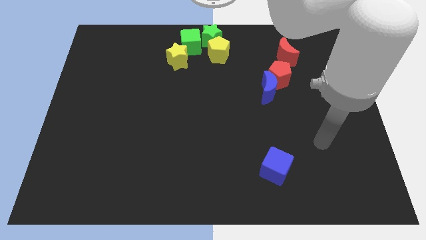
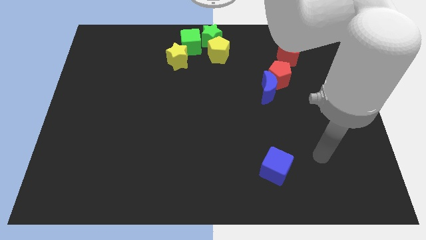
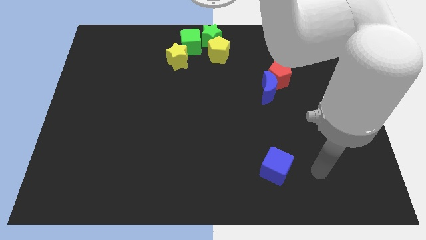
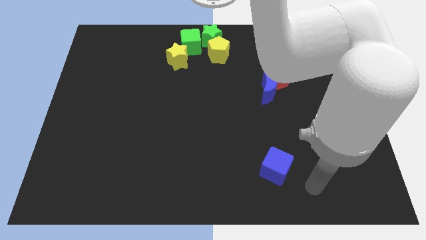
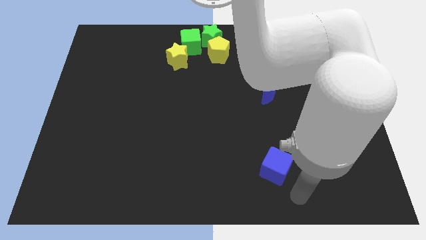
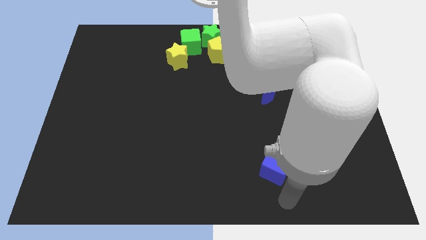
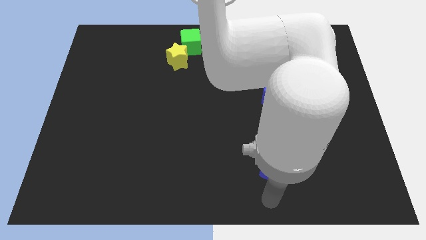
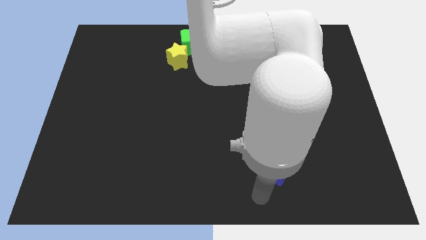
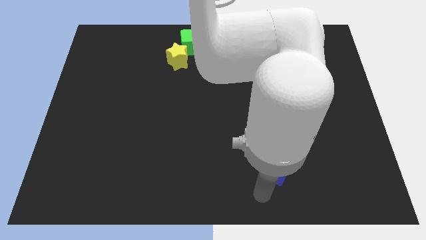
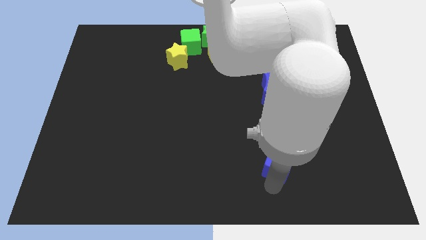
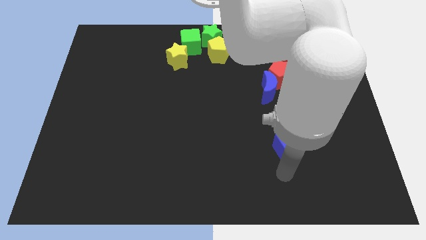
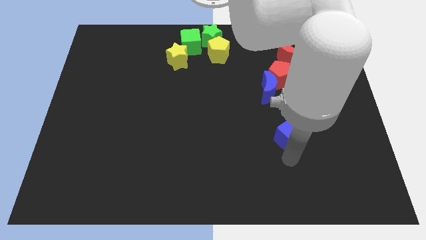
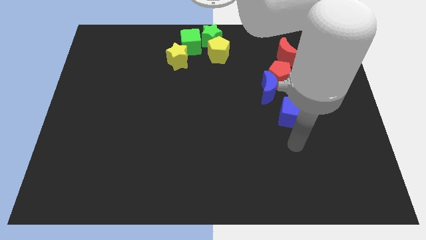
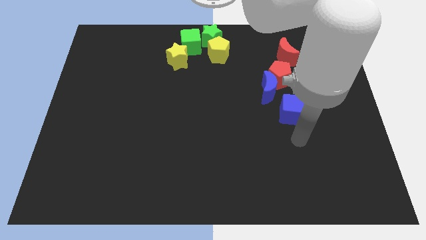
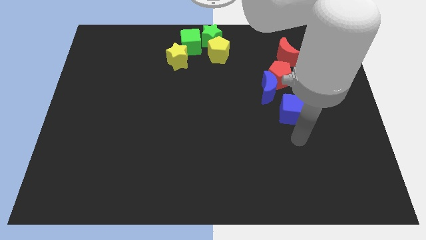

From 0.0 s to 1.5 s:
move the blue cube diagonally bottom right to the blue moon

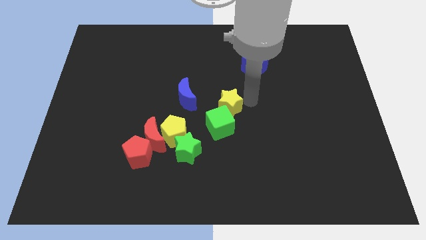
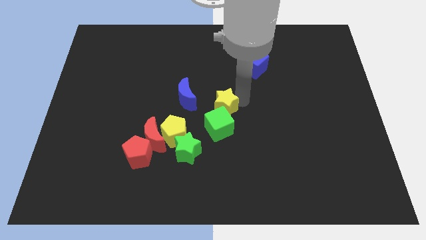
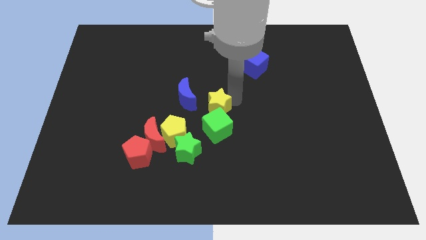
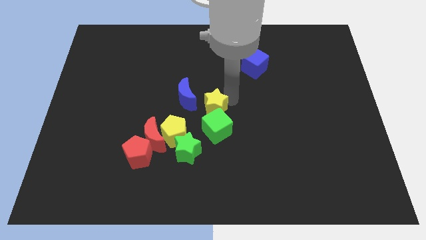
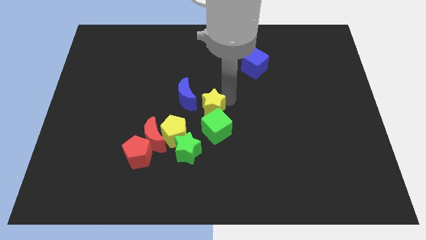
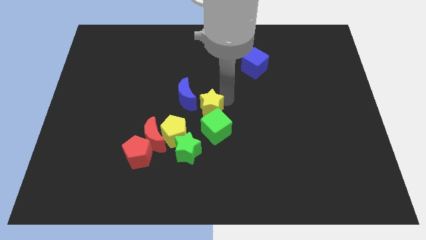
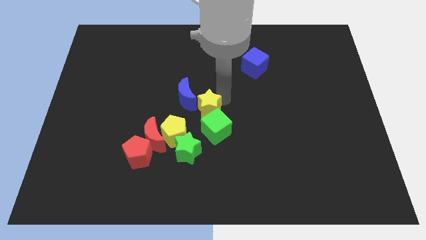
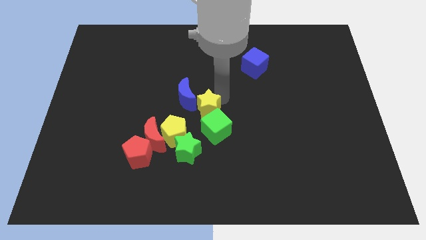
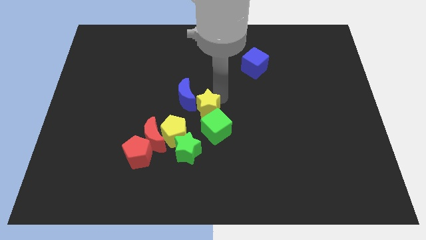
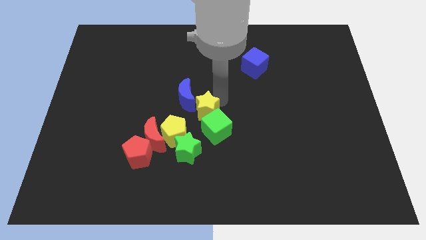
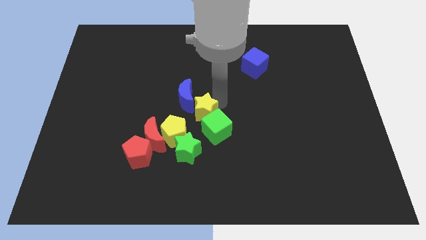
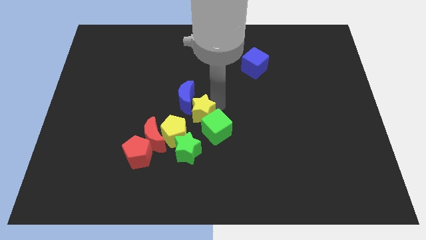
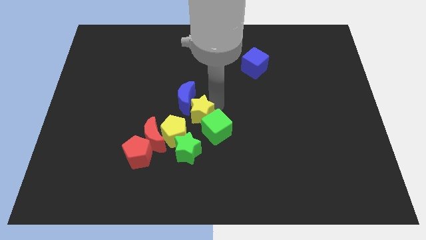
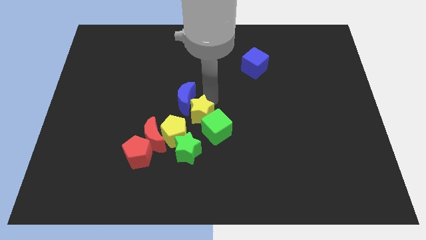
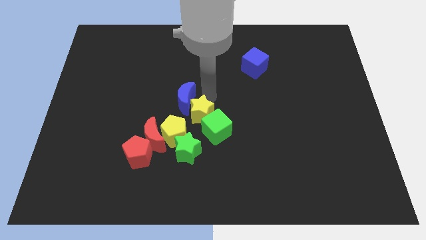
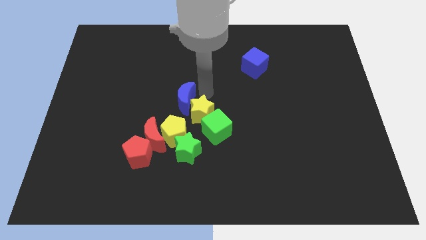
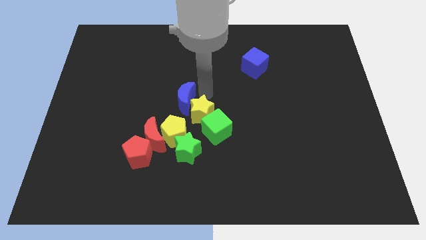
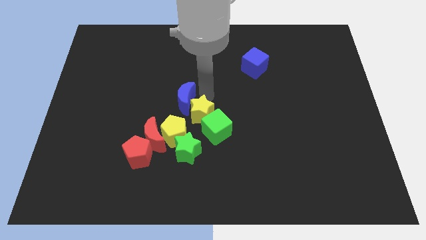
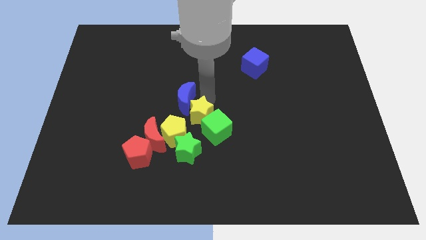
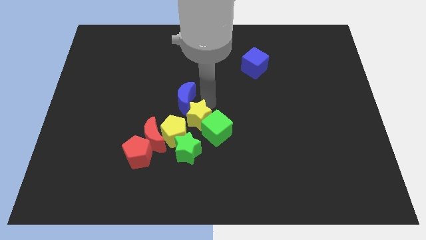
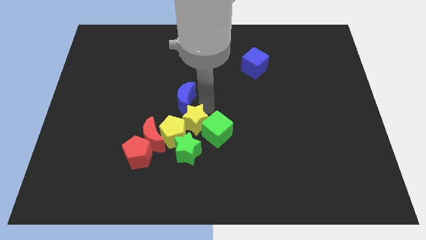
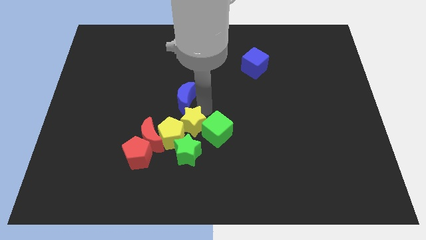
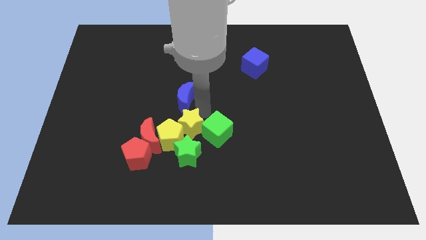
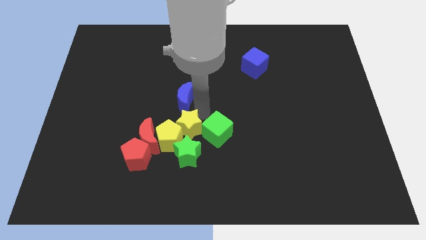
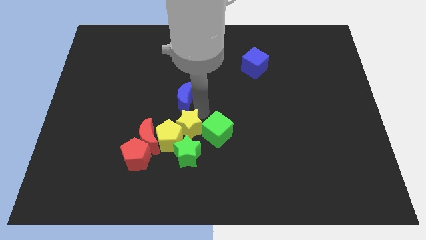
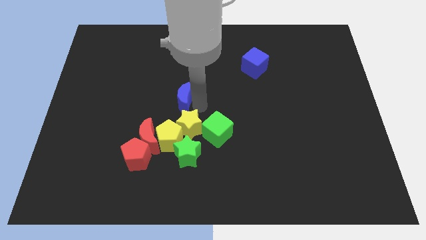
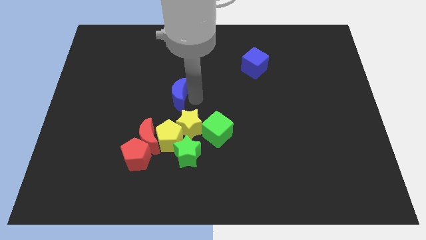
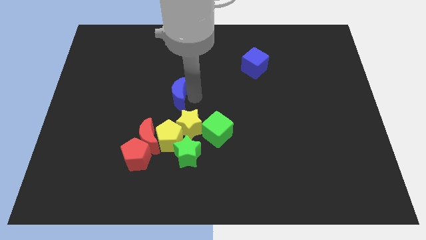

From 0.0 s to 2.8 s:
move the yellow star to the right of the yellow pentagon

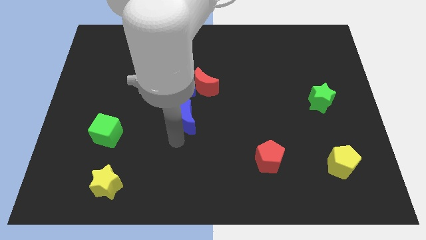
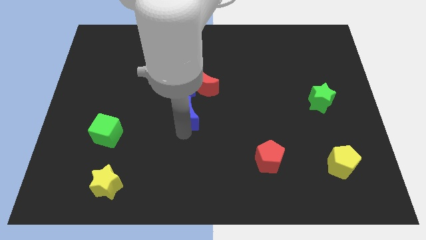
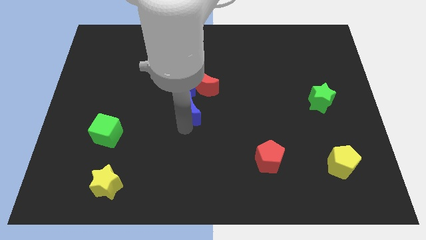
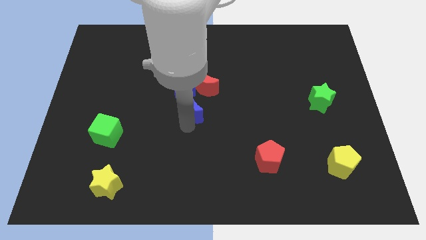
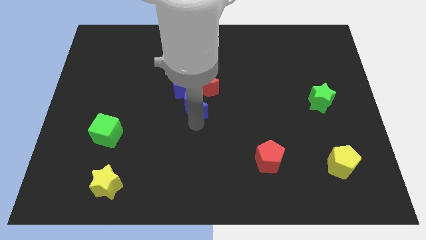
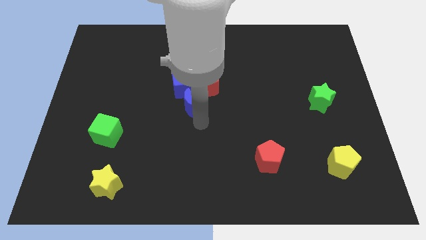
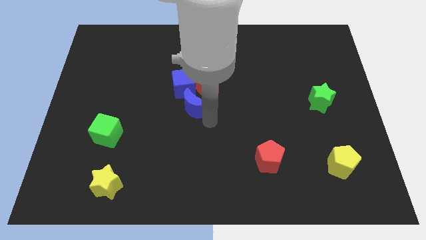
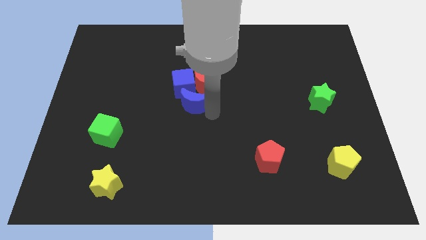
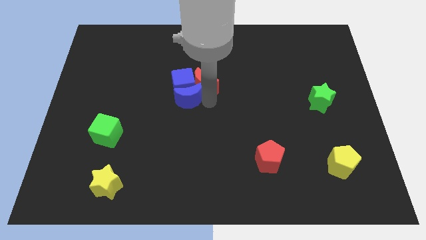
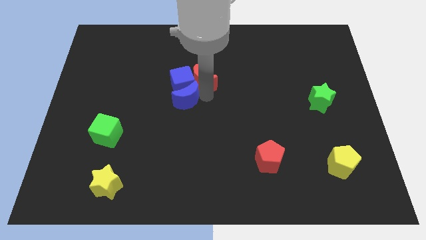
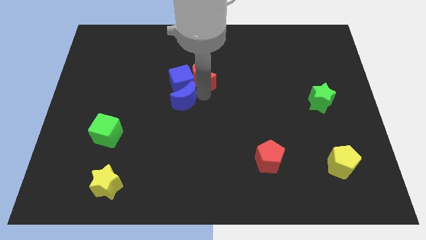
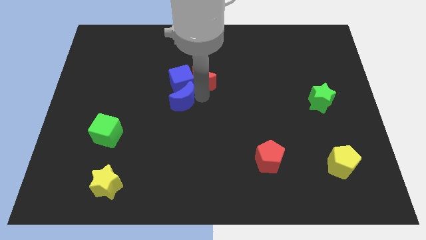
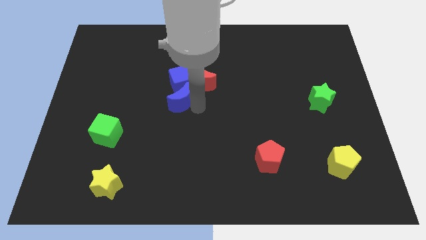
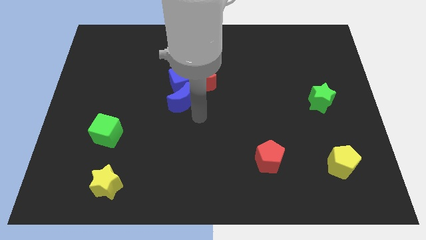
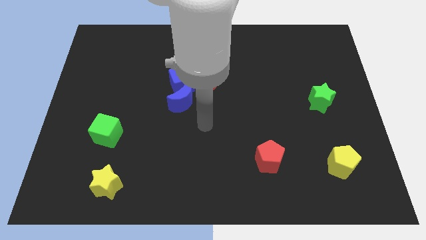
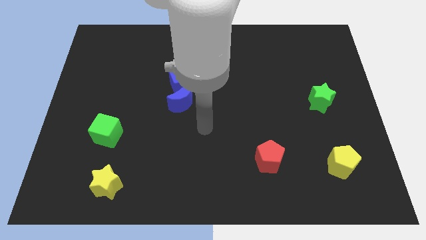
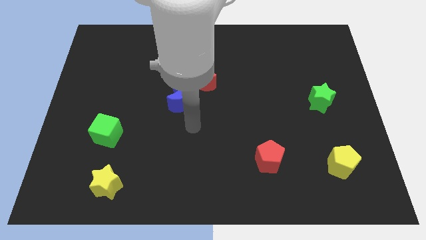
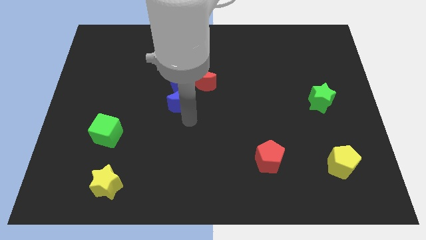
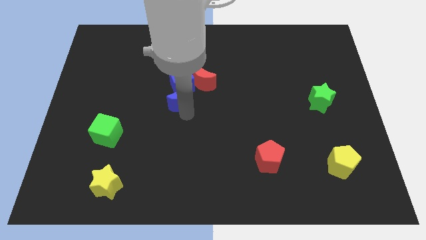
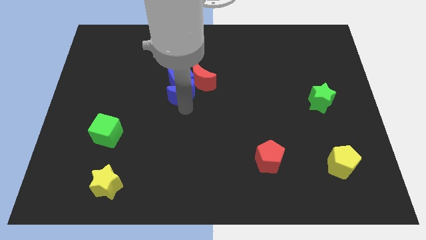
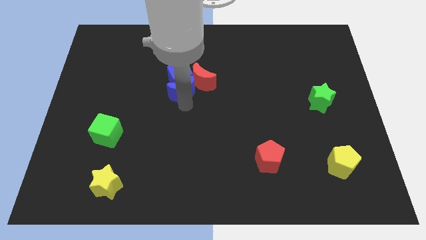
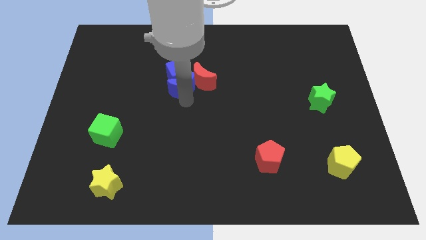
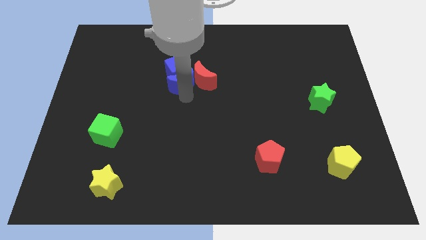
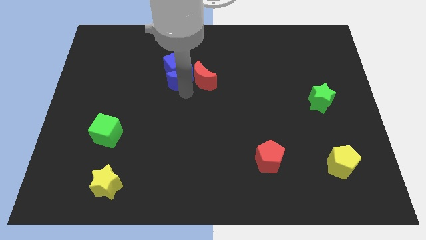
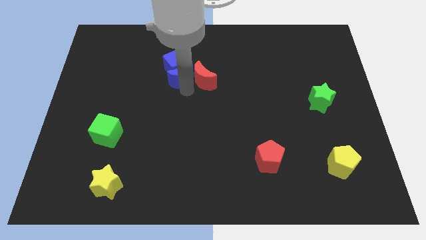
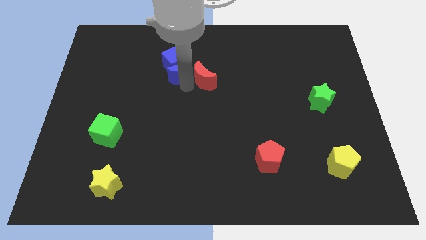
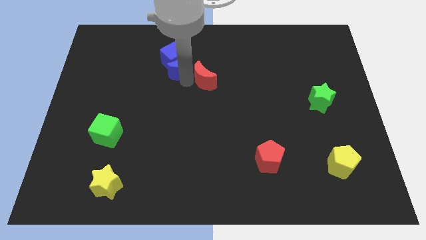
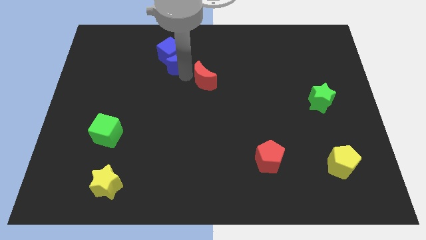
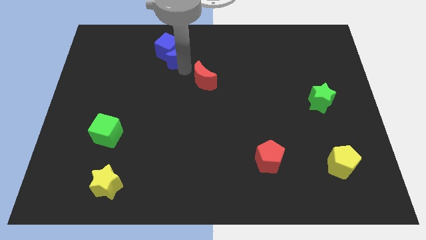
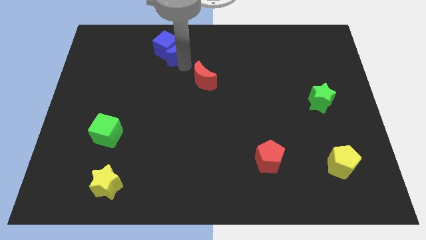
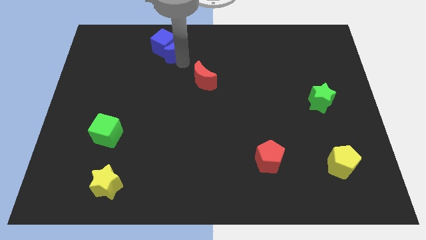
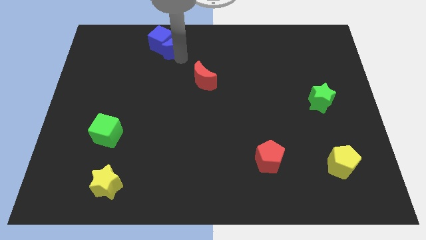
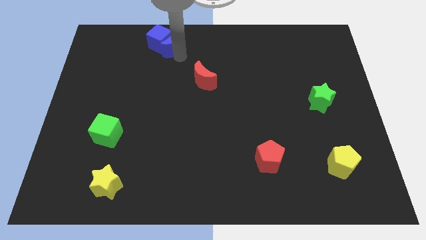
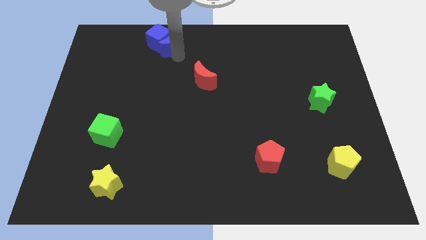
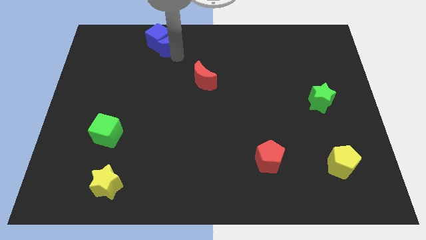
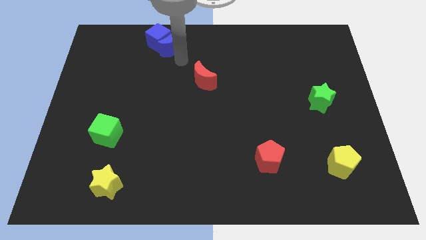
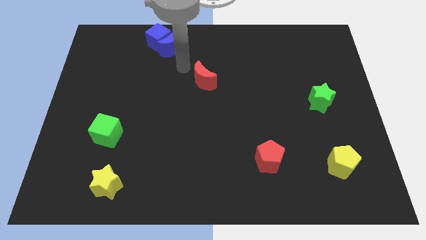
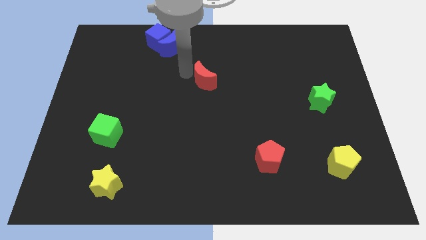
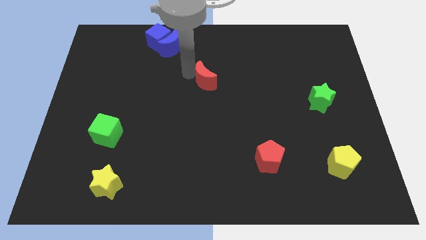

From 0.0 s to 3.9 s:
push the blue blocks towards the top side

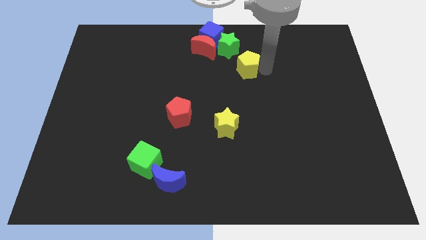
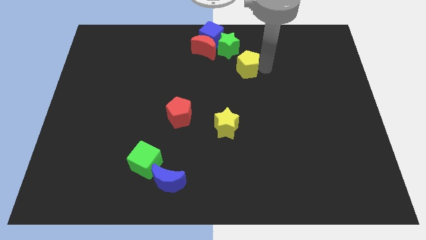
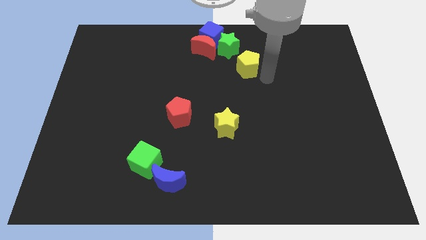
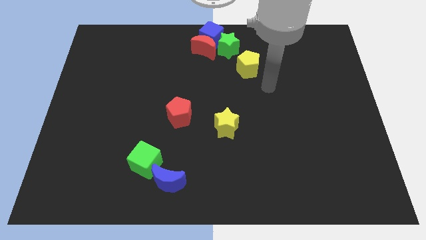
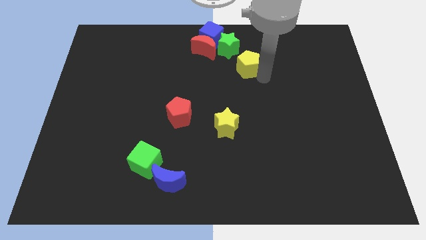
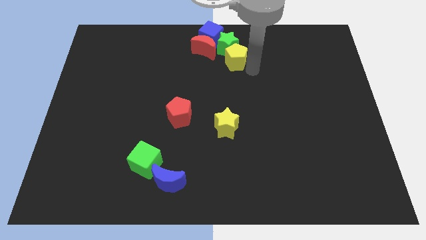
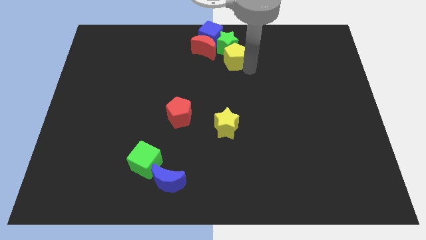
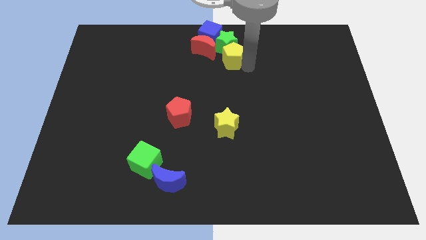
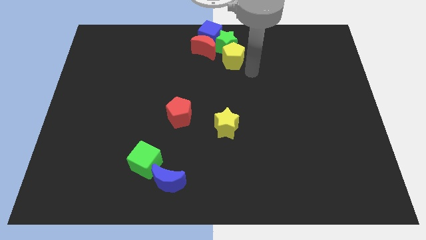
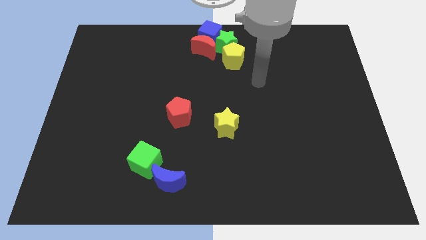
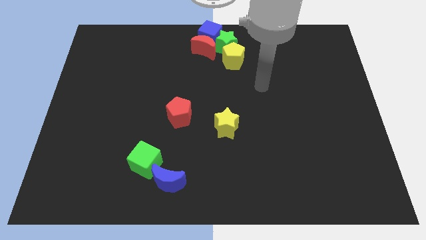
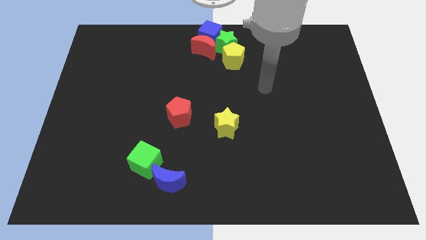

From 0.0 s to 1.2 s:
move the yellow pentagon into the green star
